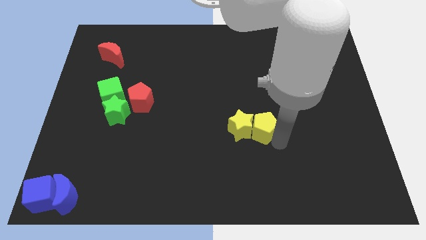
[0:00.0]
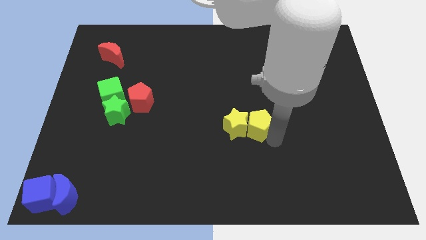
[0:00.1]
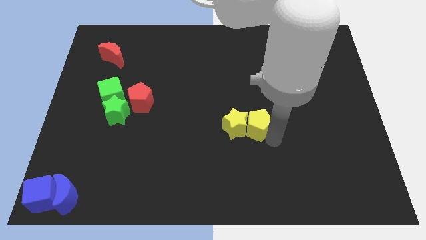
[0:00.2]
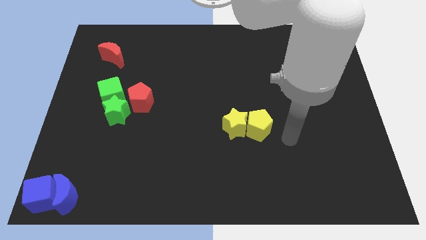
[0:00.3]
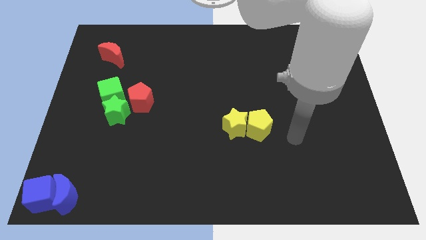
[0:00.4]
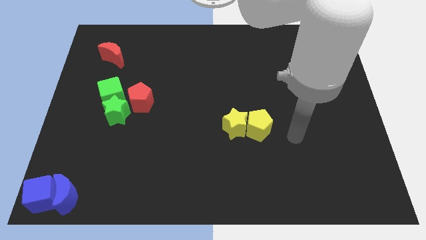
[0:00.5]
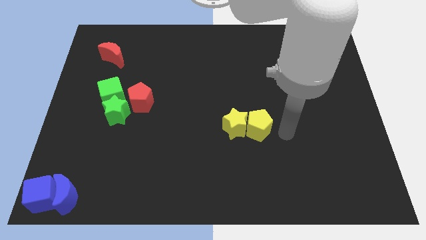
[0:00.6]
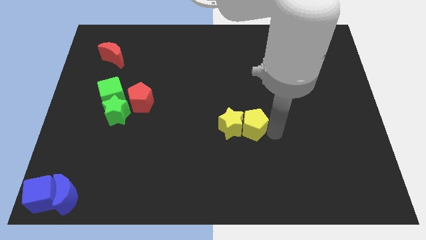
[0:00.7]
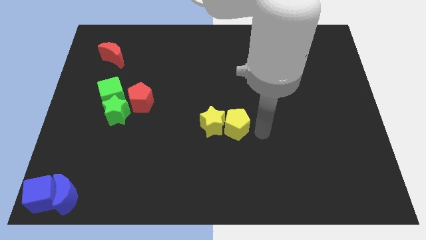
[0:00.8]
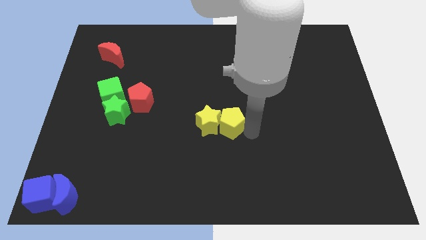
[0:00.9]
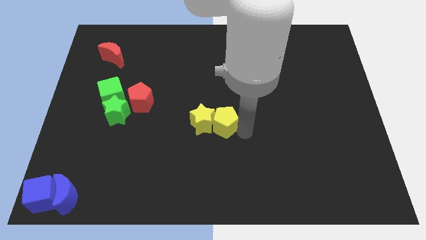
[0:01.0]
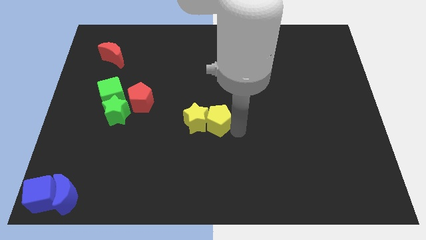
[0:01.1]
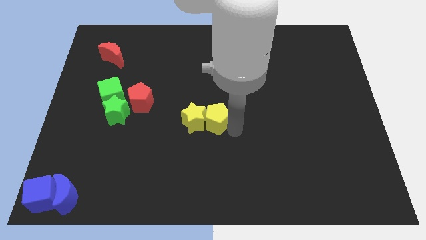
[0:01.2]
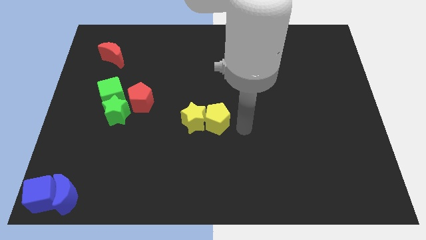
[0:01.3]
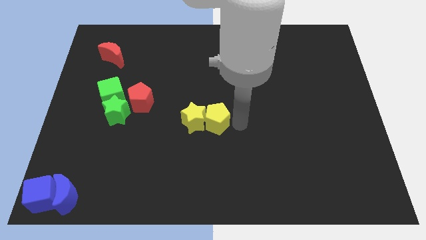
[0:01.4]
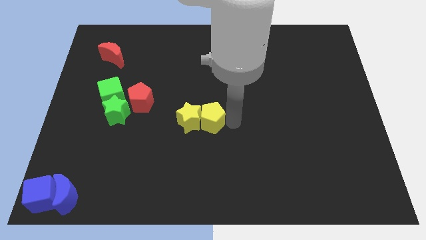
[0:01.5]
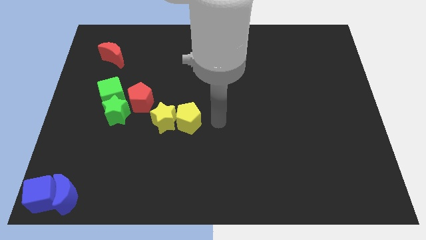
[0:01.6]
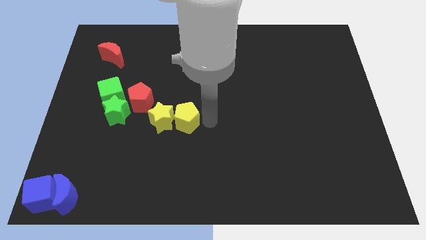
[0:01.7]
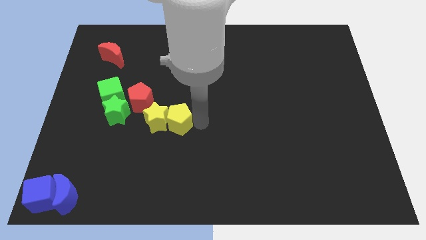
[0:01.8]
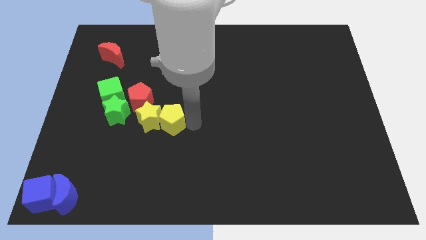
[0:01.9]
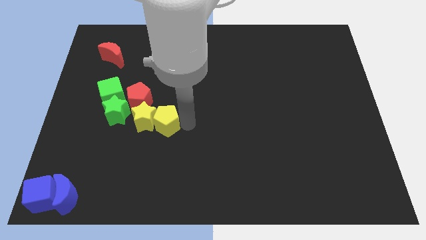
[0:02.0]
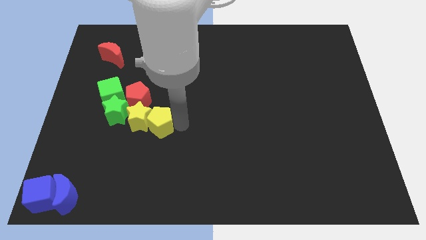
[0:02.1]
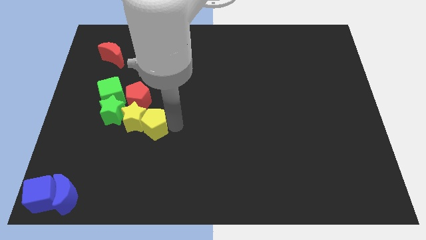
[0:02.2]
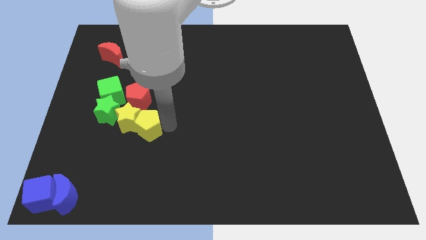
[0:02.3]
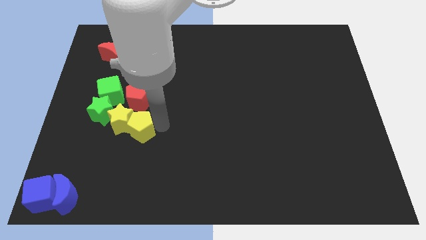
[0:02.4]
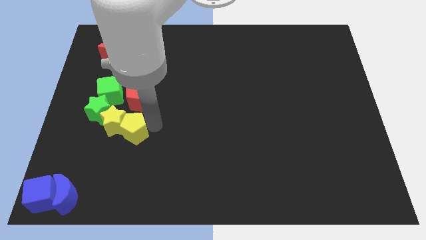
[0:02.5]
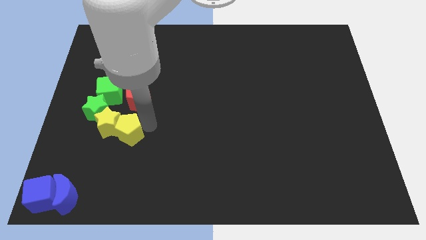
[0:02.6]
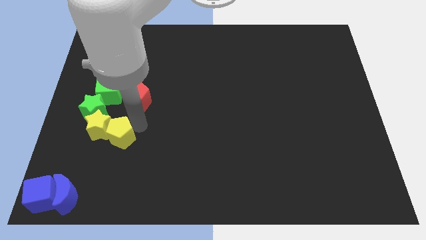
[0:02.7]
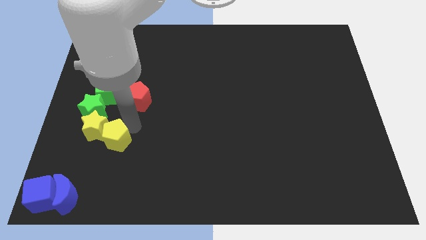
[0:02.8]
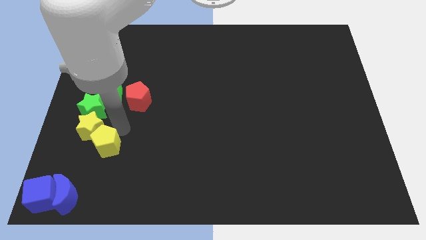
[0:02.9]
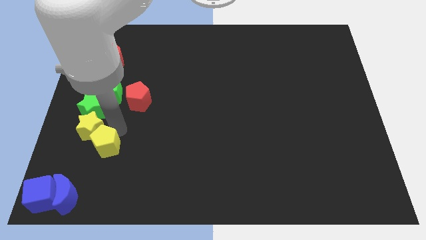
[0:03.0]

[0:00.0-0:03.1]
move the yellow blocks into the bottom side of the green star

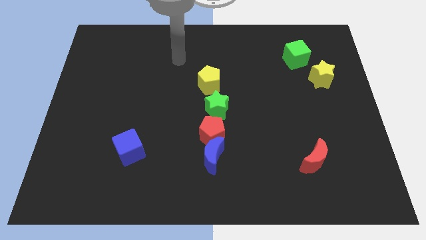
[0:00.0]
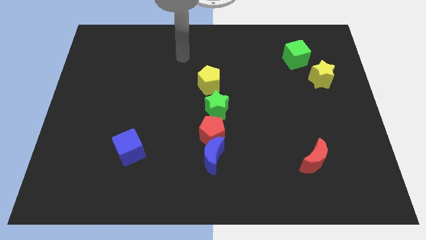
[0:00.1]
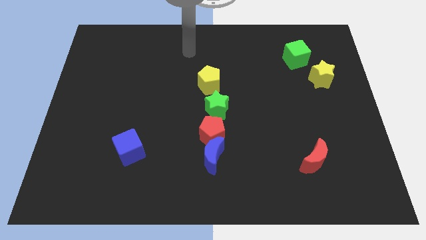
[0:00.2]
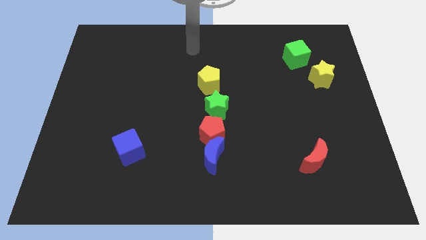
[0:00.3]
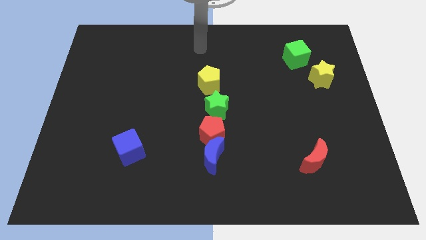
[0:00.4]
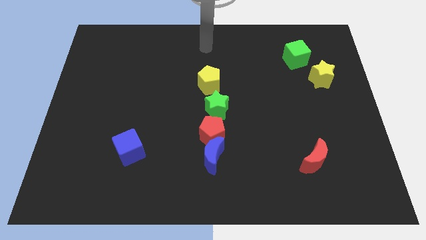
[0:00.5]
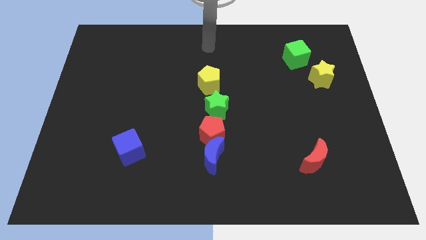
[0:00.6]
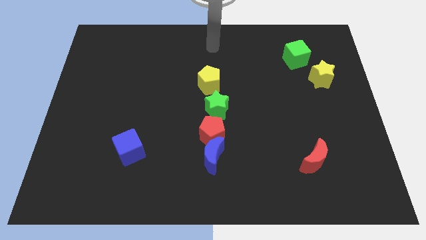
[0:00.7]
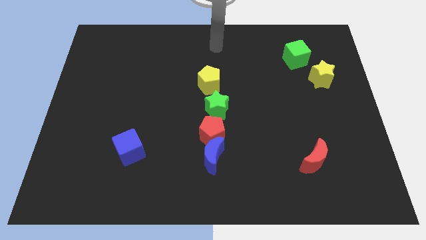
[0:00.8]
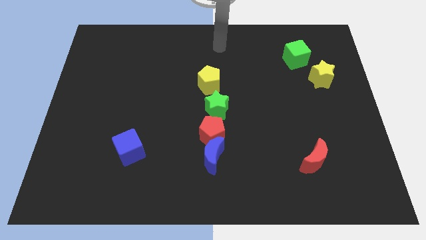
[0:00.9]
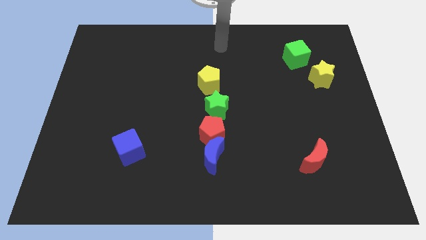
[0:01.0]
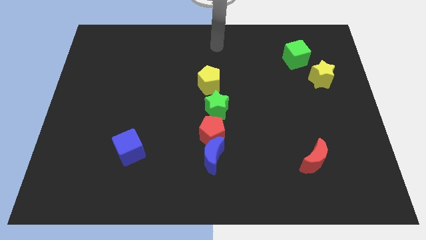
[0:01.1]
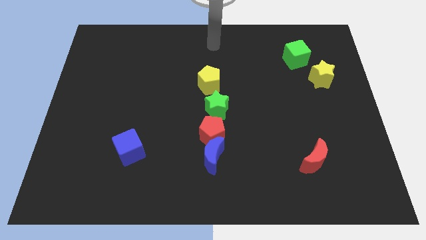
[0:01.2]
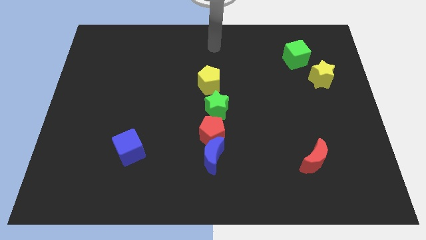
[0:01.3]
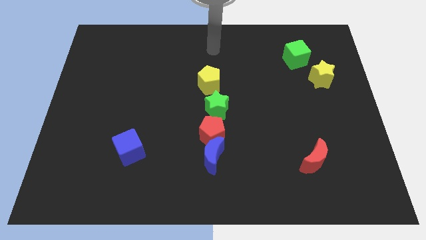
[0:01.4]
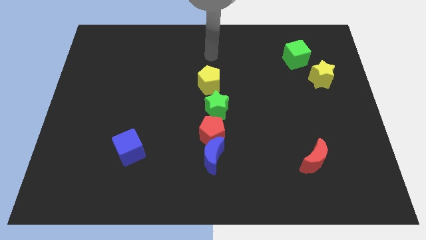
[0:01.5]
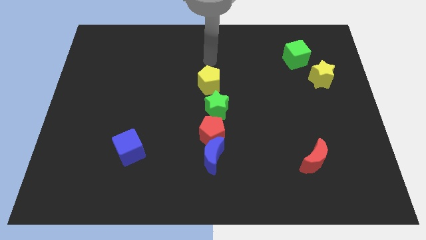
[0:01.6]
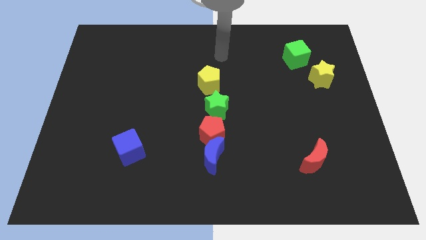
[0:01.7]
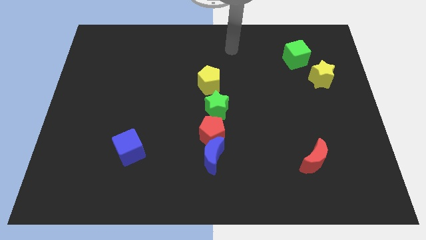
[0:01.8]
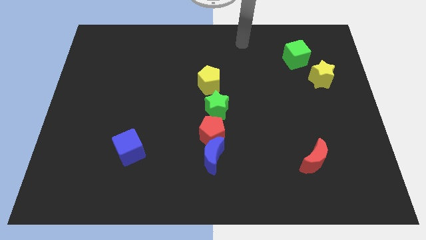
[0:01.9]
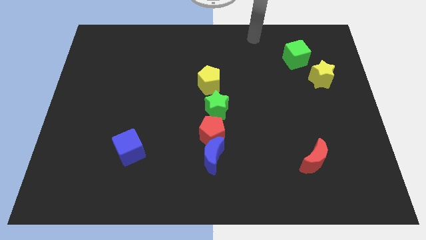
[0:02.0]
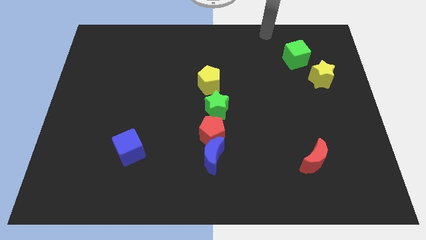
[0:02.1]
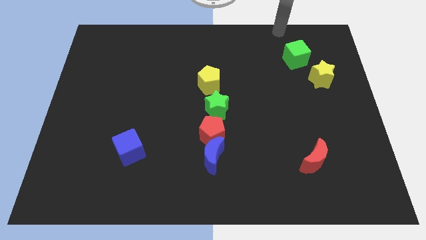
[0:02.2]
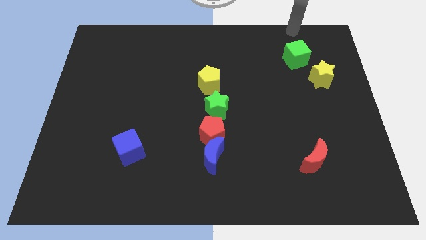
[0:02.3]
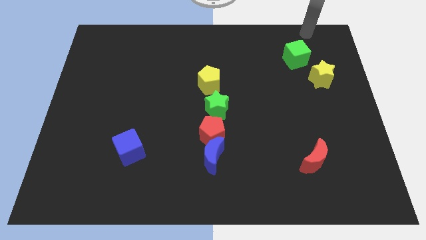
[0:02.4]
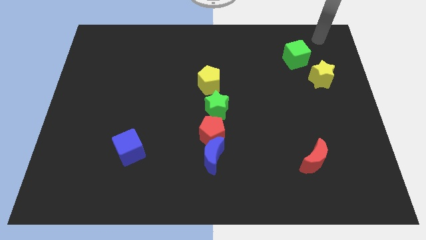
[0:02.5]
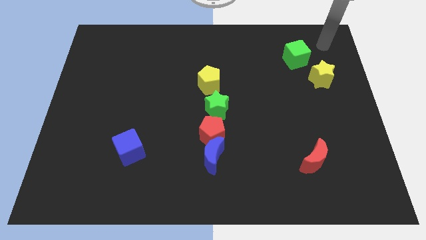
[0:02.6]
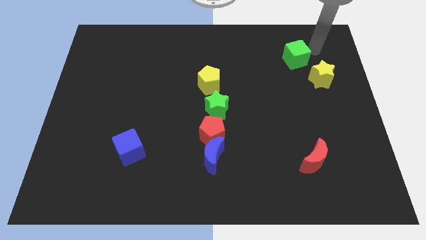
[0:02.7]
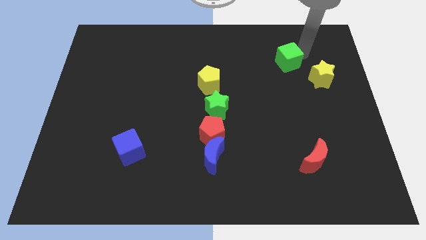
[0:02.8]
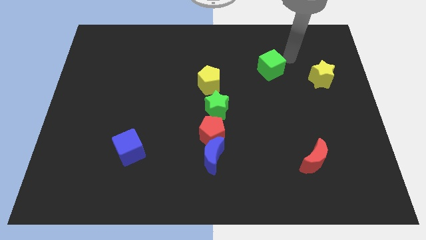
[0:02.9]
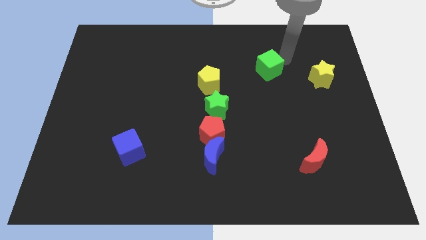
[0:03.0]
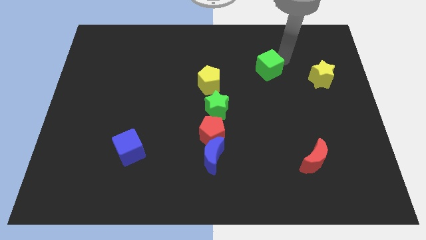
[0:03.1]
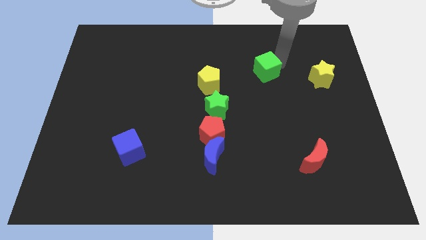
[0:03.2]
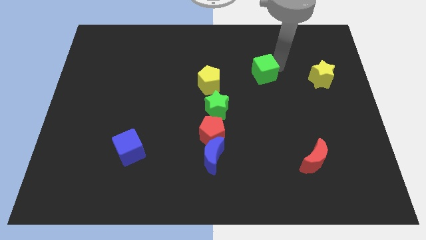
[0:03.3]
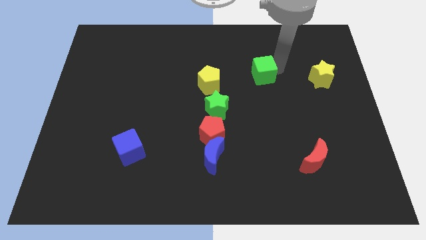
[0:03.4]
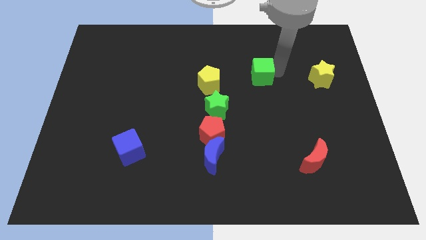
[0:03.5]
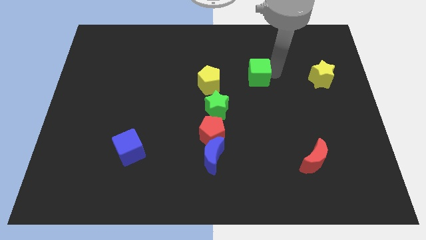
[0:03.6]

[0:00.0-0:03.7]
move green cube towards yellow pentagon

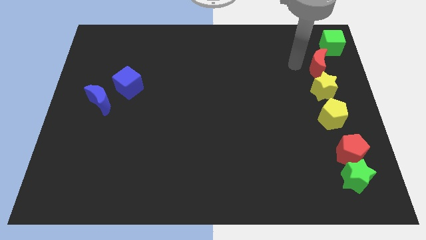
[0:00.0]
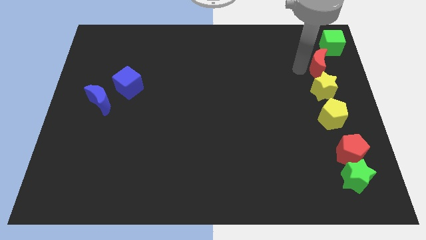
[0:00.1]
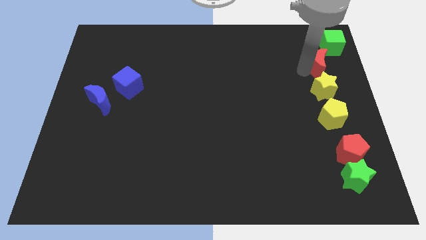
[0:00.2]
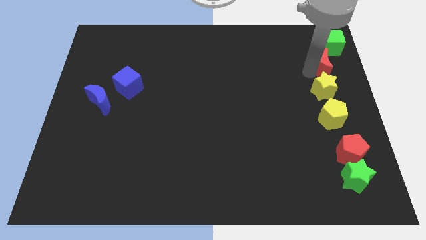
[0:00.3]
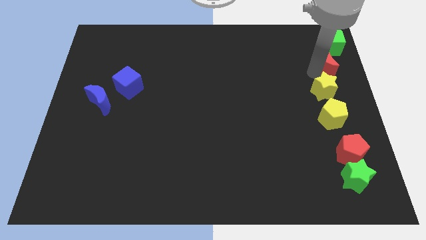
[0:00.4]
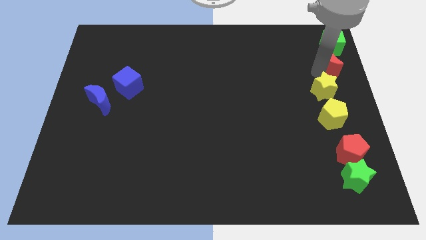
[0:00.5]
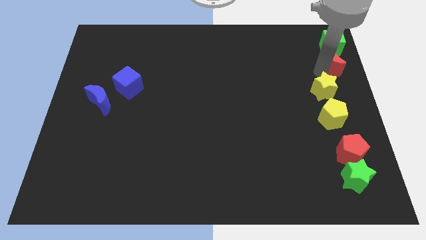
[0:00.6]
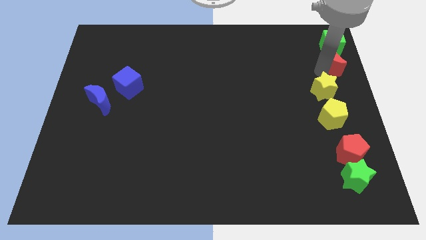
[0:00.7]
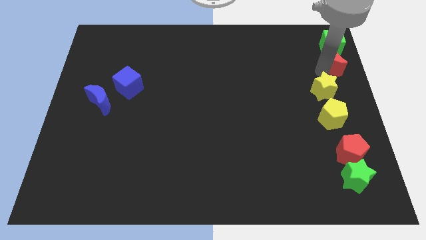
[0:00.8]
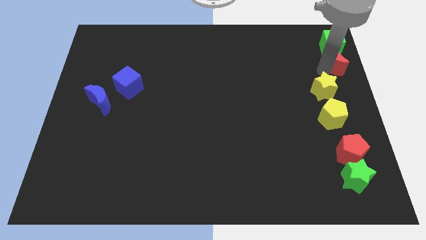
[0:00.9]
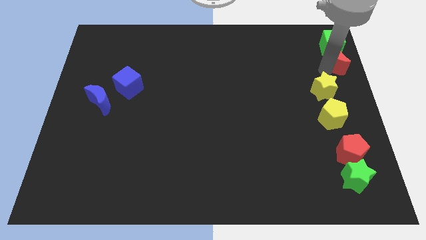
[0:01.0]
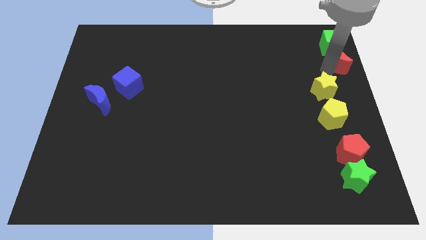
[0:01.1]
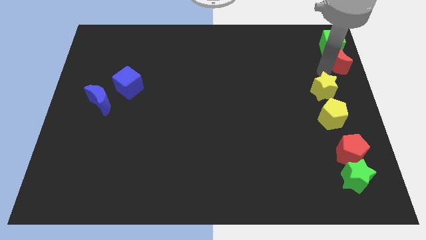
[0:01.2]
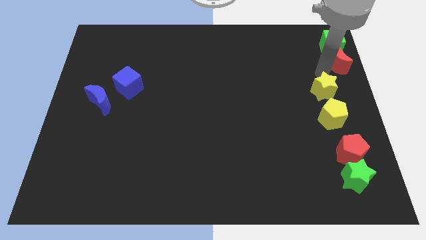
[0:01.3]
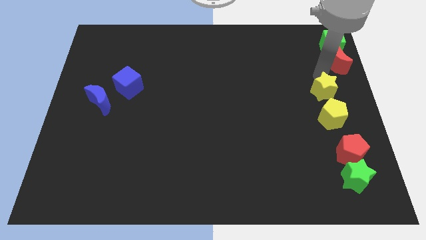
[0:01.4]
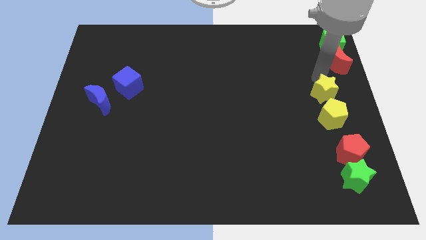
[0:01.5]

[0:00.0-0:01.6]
put the red crescent below the green cube

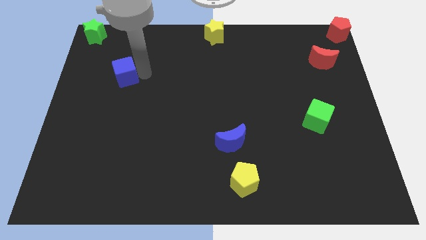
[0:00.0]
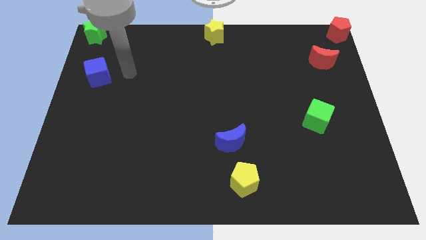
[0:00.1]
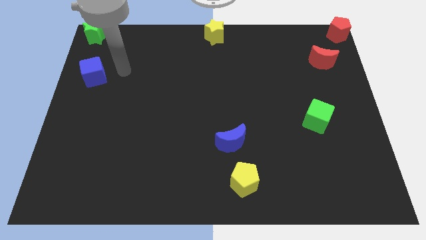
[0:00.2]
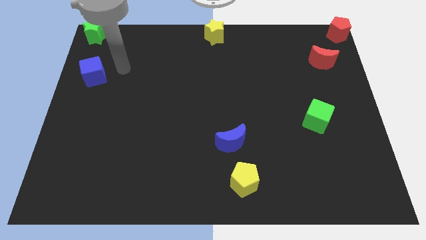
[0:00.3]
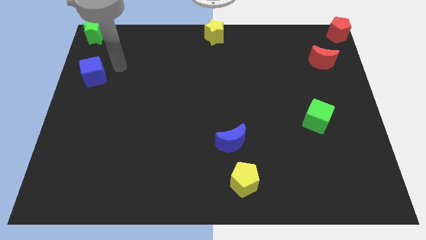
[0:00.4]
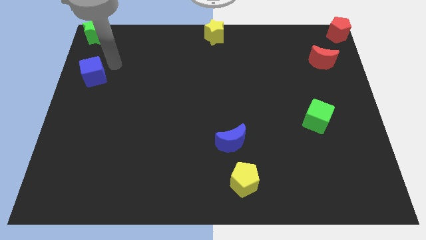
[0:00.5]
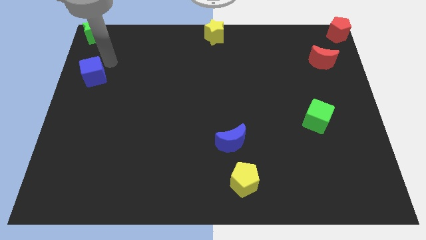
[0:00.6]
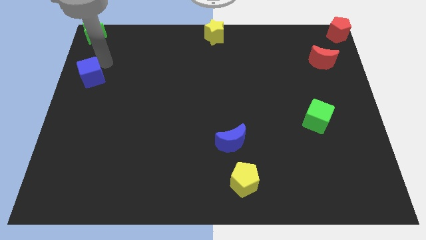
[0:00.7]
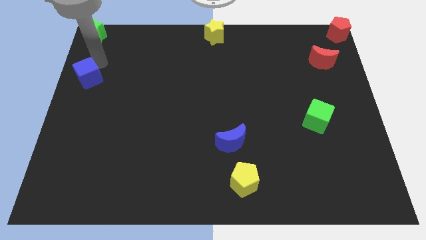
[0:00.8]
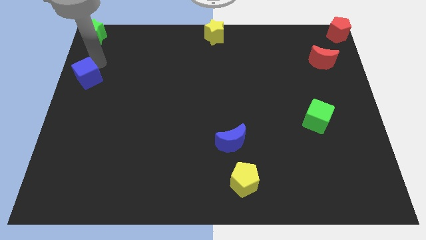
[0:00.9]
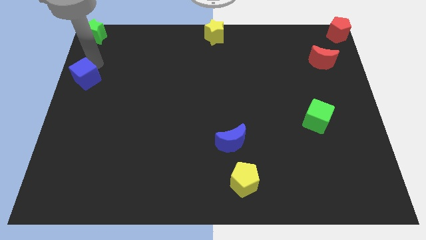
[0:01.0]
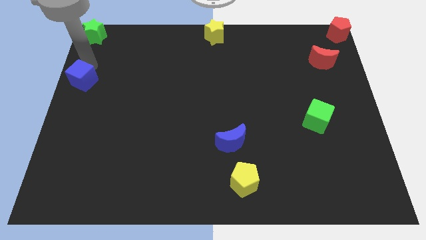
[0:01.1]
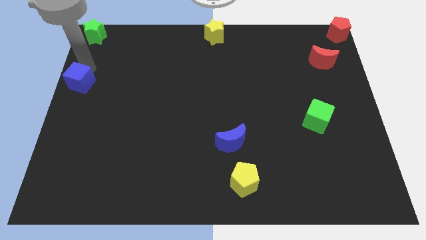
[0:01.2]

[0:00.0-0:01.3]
put the blue cube vertically below the green star
